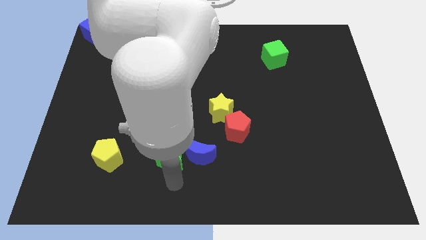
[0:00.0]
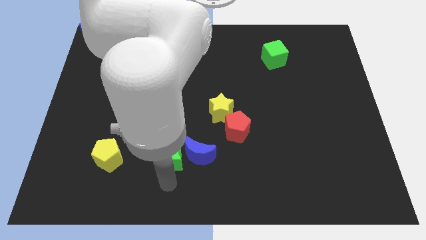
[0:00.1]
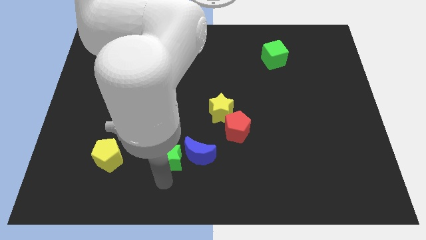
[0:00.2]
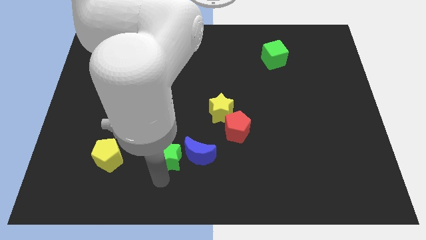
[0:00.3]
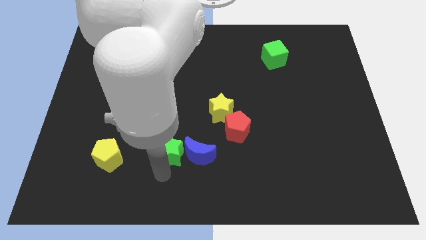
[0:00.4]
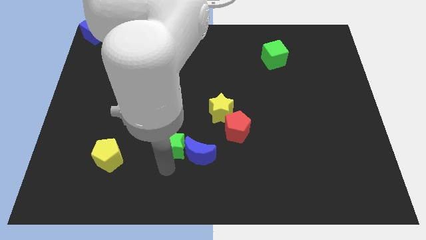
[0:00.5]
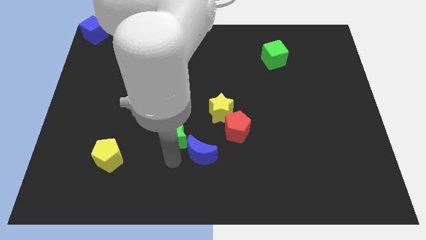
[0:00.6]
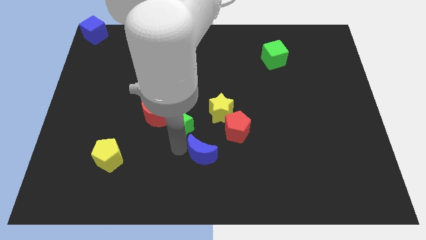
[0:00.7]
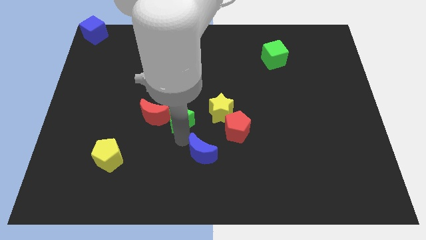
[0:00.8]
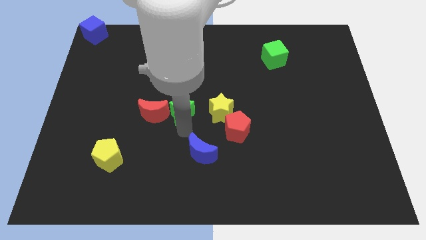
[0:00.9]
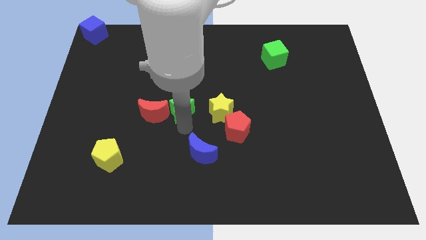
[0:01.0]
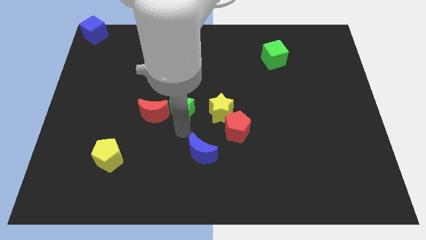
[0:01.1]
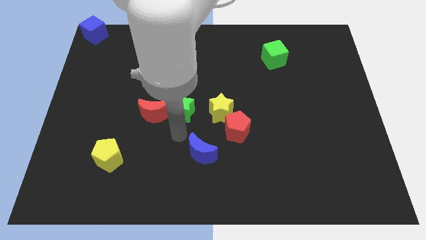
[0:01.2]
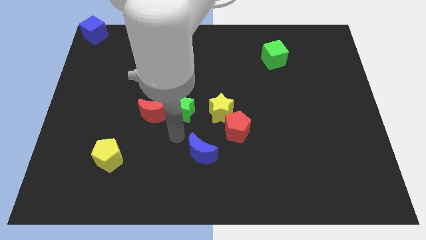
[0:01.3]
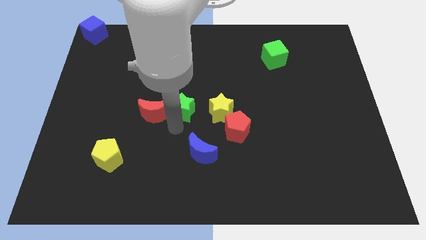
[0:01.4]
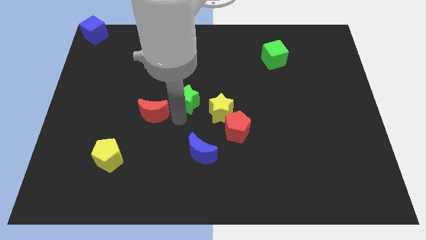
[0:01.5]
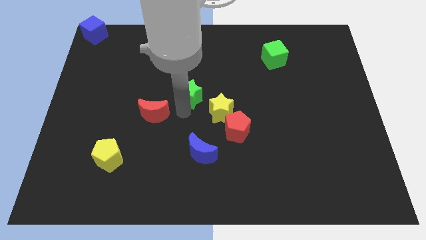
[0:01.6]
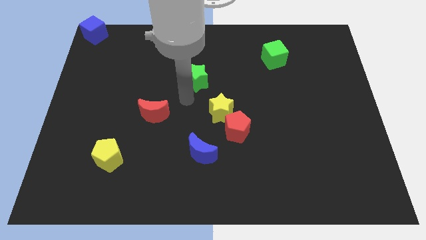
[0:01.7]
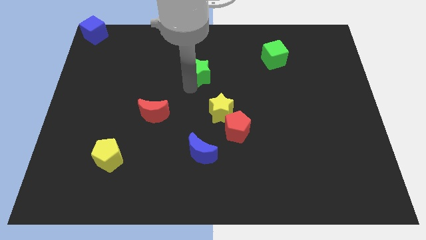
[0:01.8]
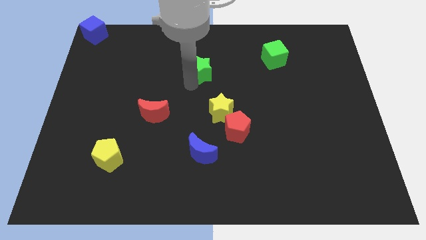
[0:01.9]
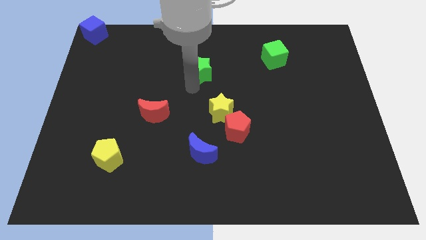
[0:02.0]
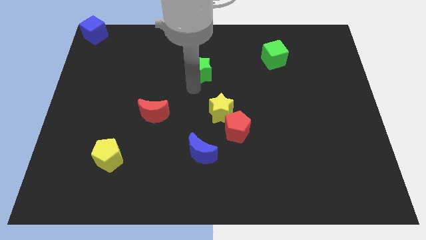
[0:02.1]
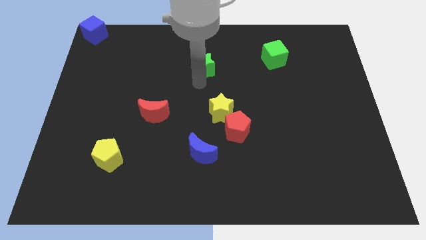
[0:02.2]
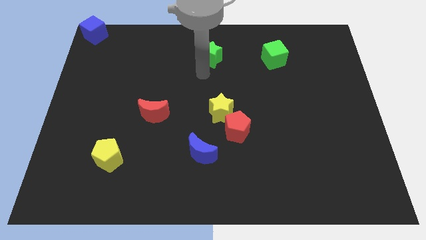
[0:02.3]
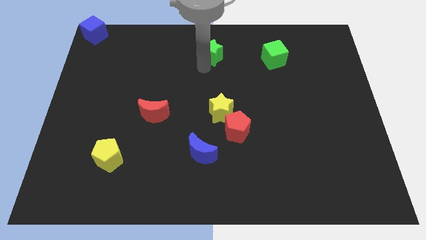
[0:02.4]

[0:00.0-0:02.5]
move green star horizontally towards green cube

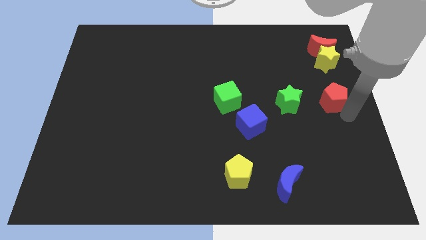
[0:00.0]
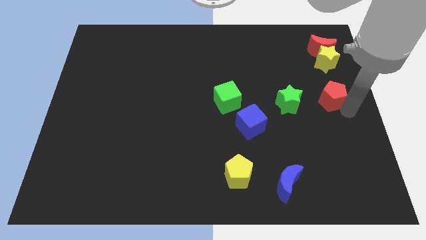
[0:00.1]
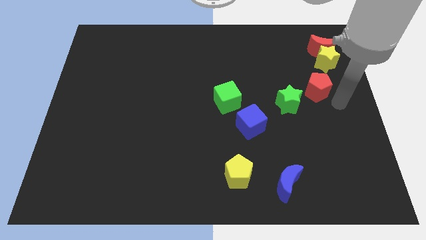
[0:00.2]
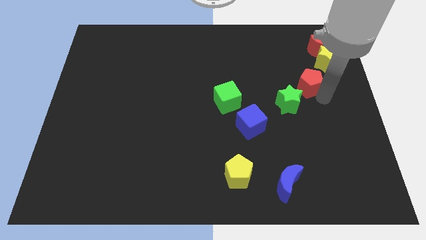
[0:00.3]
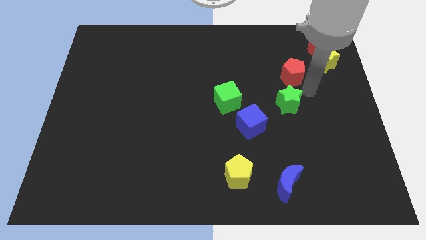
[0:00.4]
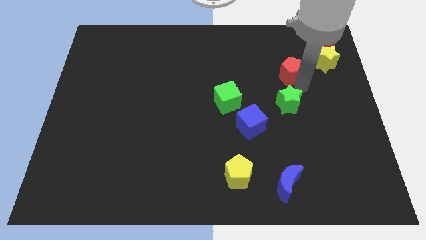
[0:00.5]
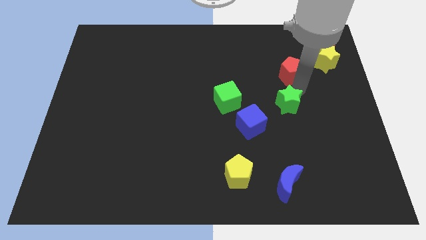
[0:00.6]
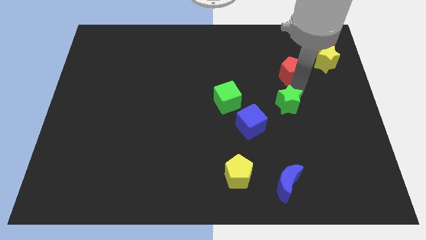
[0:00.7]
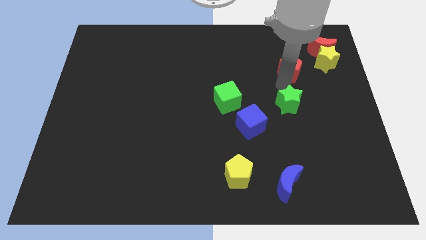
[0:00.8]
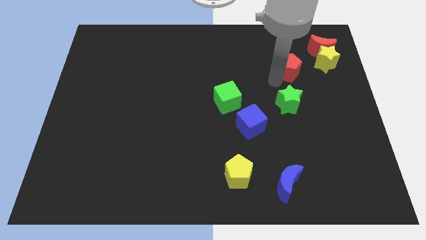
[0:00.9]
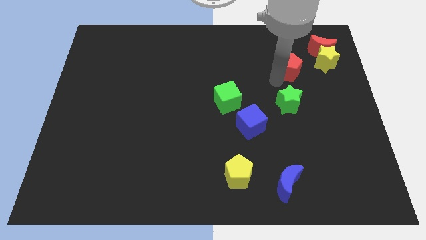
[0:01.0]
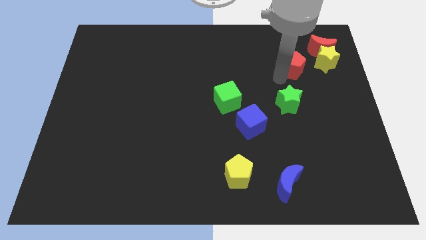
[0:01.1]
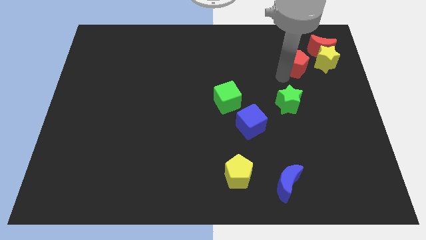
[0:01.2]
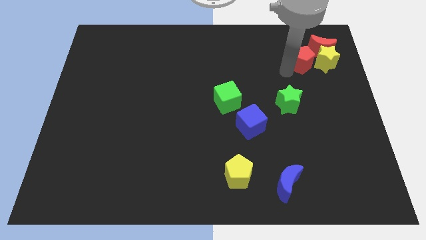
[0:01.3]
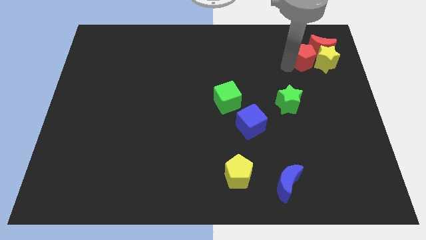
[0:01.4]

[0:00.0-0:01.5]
move the red pentagon to the left of the yellow star

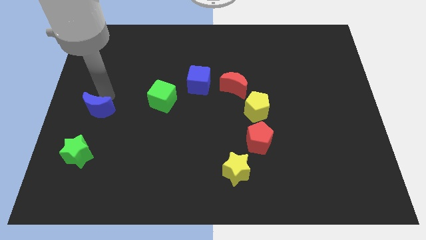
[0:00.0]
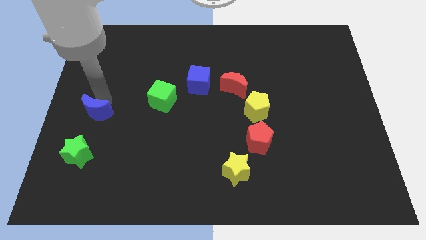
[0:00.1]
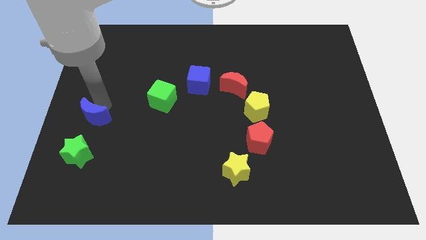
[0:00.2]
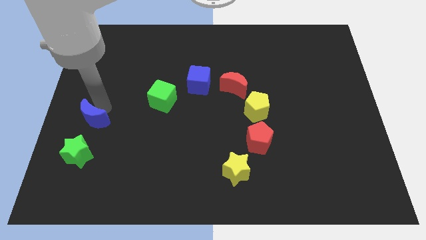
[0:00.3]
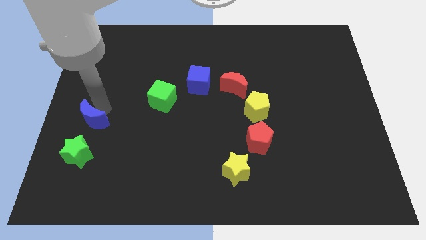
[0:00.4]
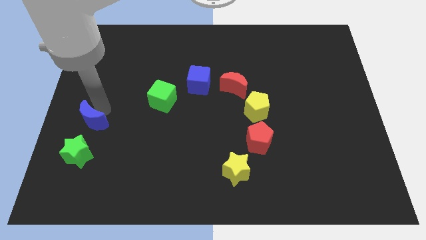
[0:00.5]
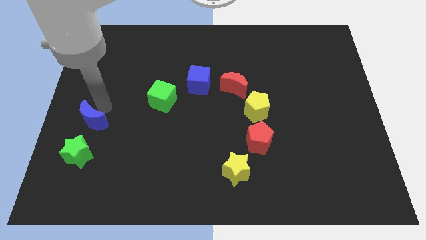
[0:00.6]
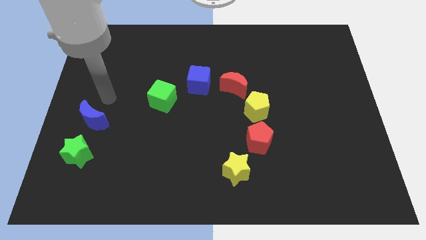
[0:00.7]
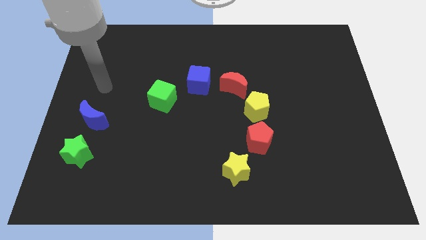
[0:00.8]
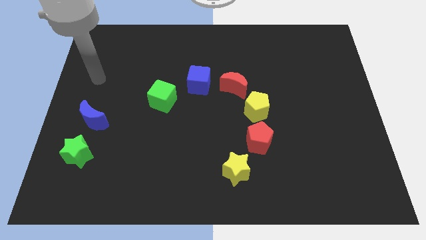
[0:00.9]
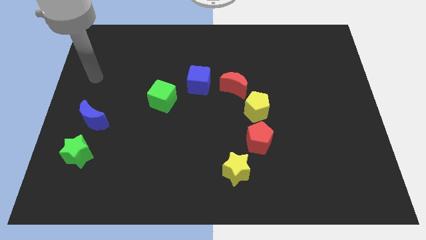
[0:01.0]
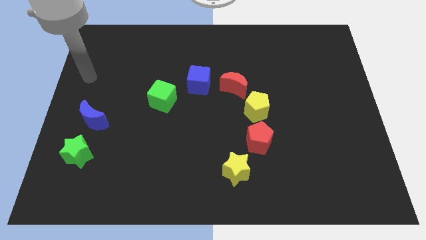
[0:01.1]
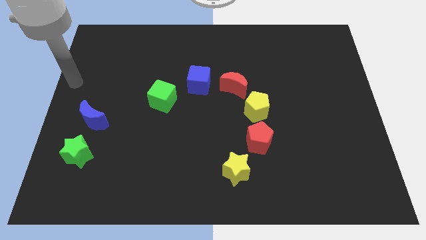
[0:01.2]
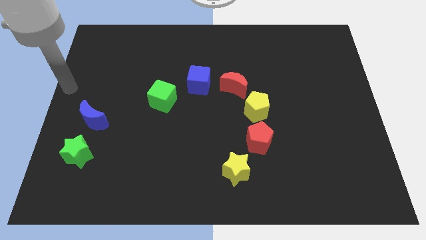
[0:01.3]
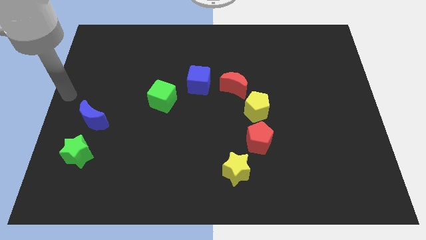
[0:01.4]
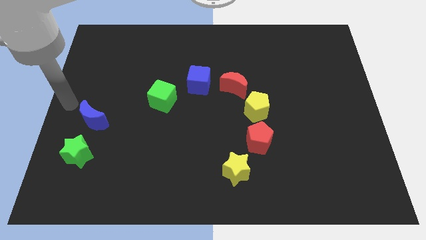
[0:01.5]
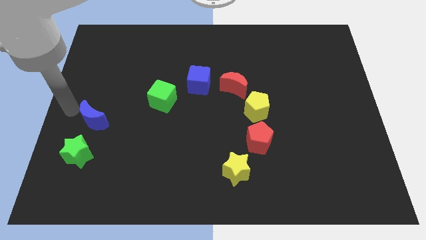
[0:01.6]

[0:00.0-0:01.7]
slide the blue moon towards the green star

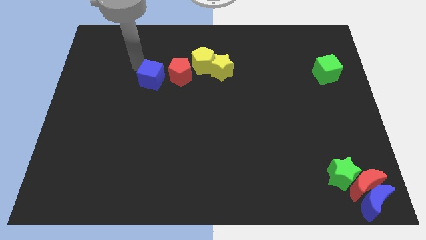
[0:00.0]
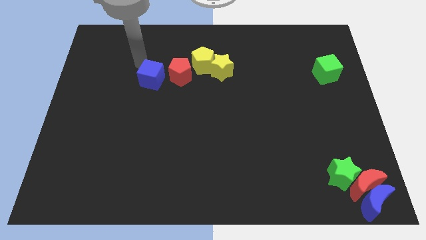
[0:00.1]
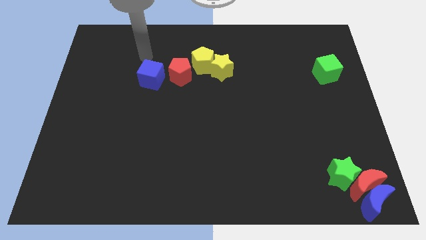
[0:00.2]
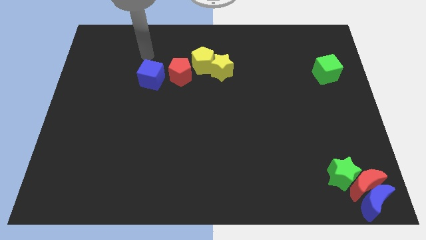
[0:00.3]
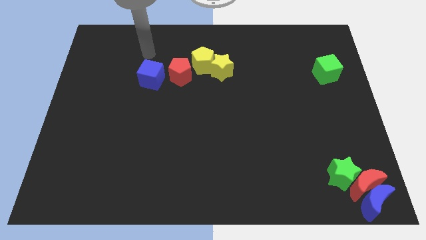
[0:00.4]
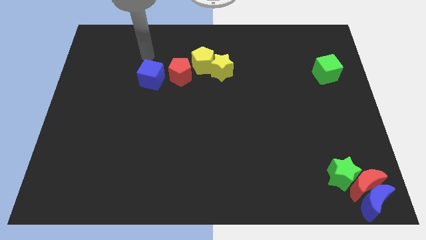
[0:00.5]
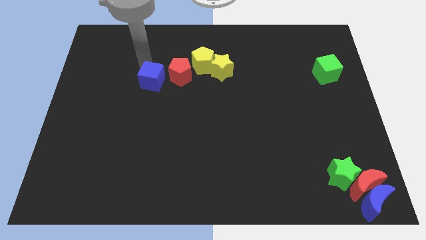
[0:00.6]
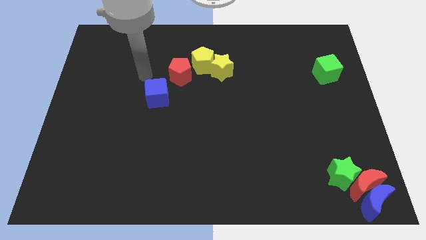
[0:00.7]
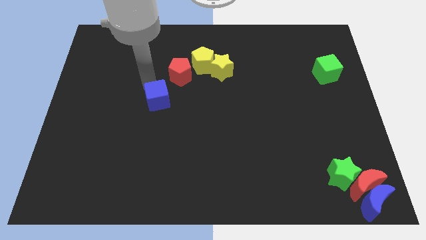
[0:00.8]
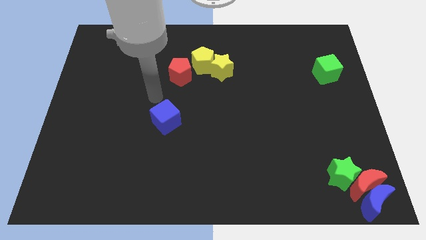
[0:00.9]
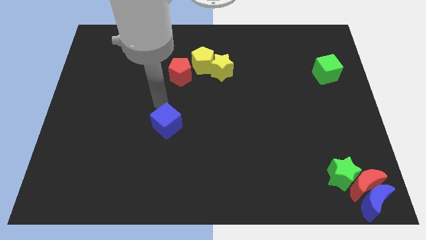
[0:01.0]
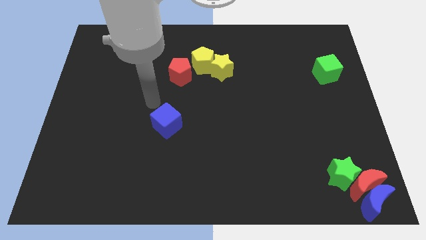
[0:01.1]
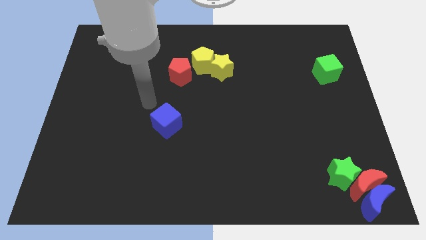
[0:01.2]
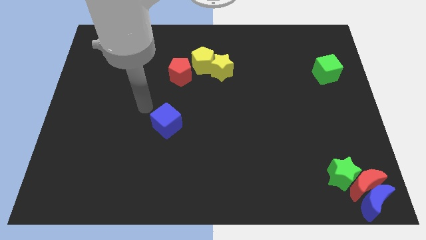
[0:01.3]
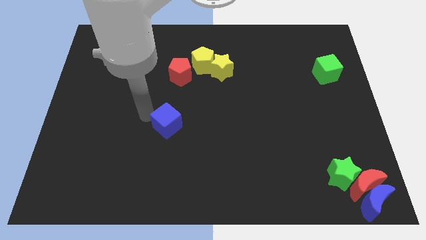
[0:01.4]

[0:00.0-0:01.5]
push the blue cube towards the center of the board

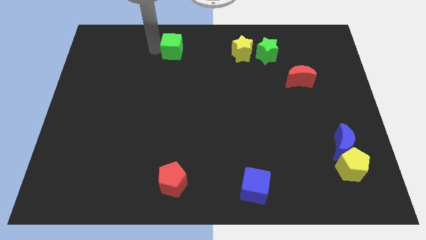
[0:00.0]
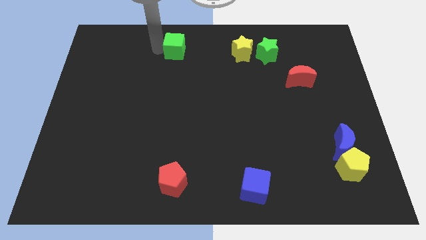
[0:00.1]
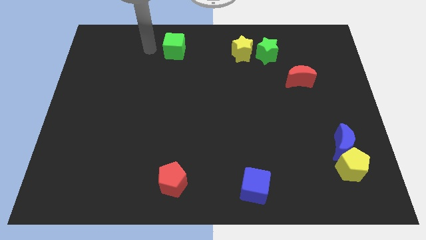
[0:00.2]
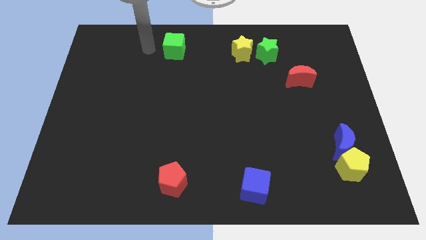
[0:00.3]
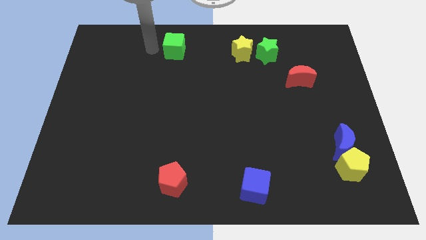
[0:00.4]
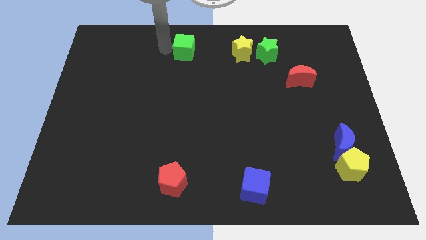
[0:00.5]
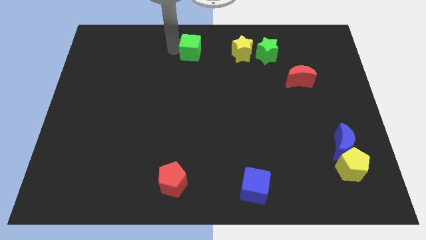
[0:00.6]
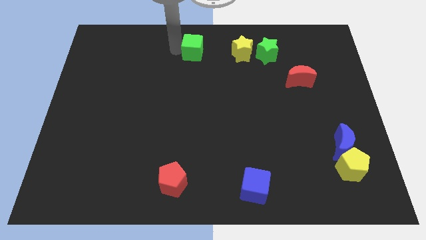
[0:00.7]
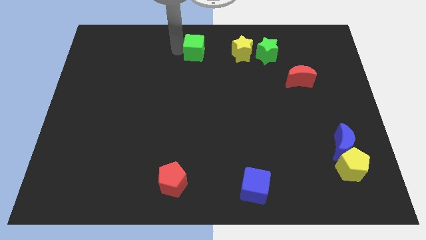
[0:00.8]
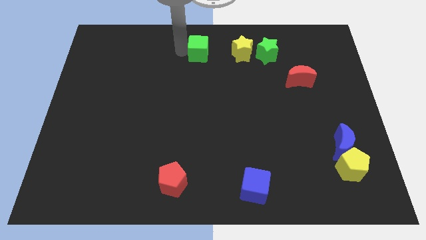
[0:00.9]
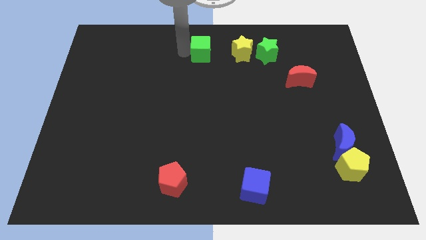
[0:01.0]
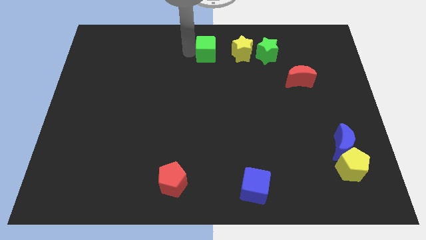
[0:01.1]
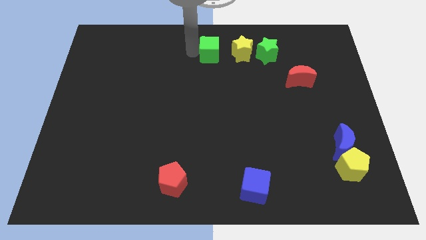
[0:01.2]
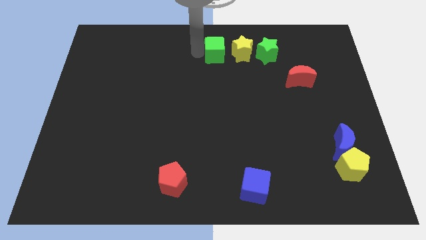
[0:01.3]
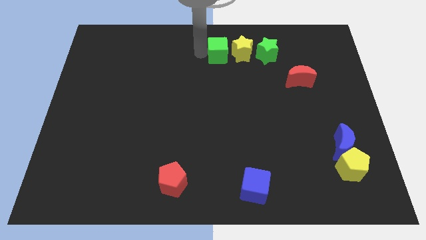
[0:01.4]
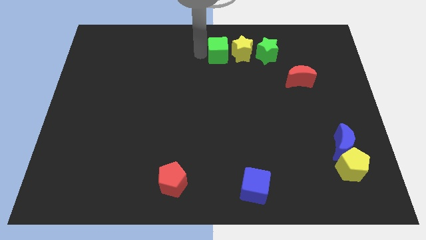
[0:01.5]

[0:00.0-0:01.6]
place the green cube to the left side of the yellow star

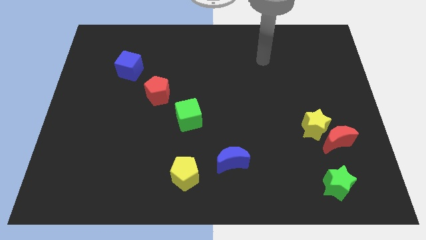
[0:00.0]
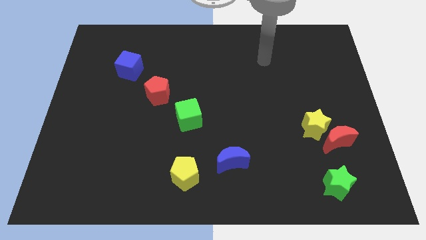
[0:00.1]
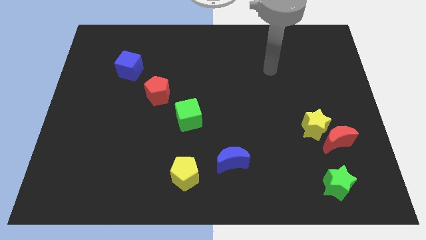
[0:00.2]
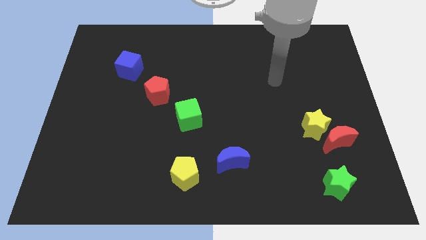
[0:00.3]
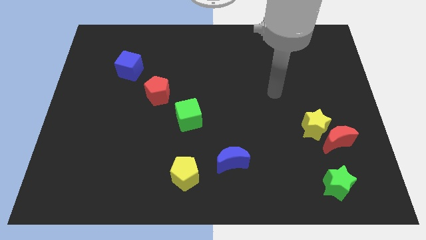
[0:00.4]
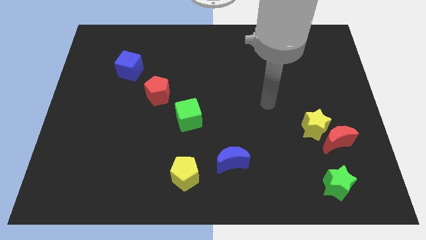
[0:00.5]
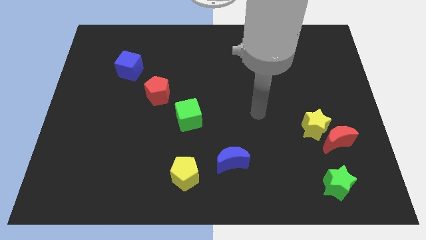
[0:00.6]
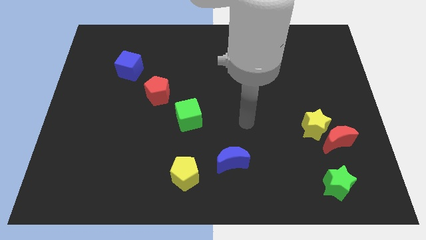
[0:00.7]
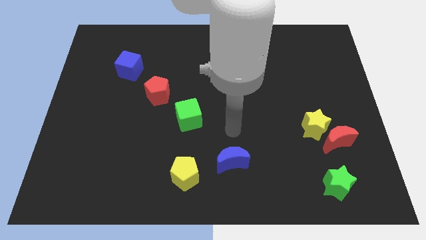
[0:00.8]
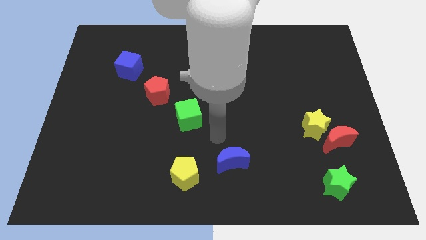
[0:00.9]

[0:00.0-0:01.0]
point your arm above the blue crescent